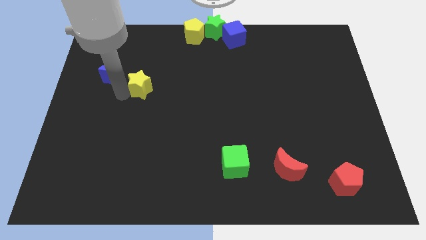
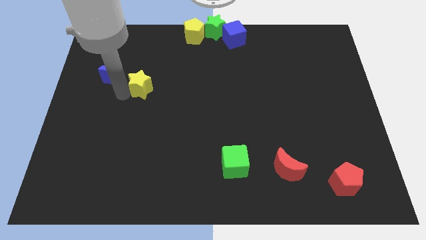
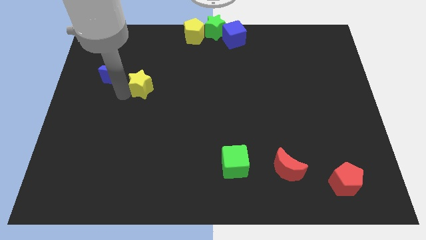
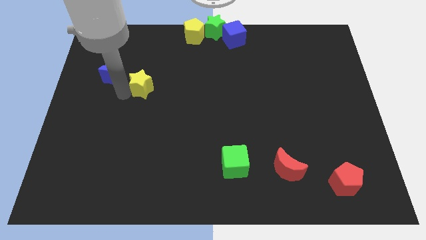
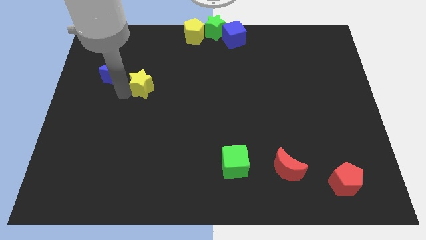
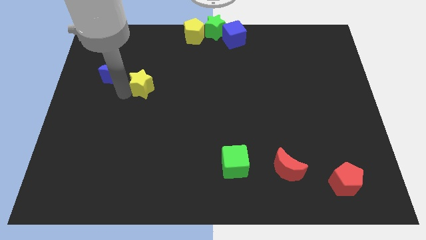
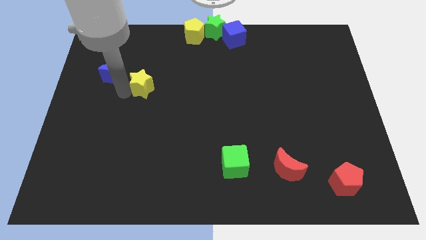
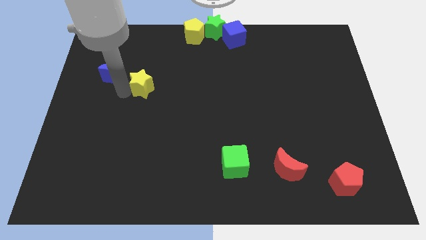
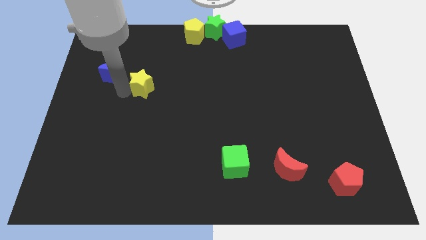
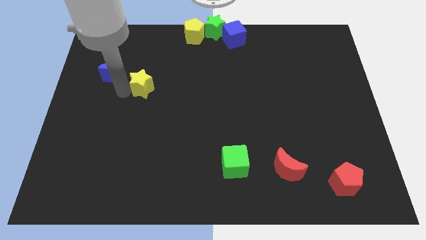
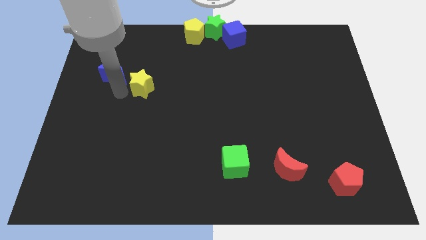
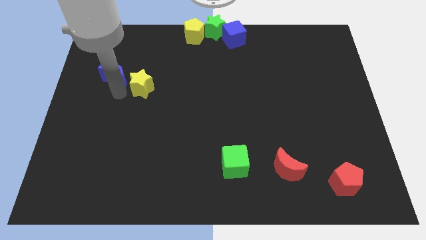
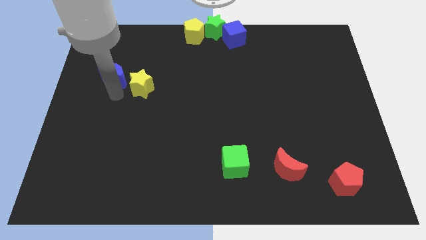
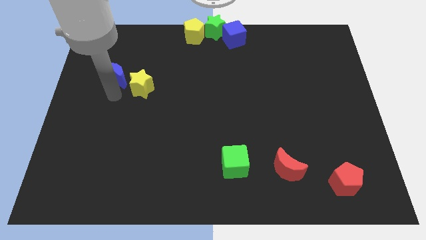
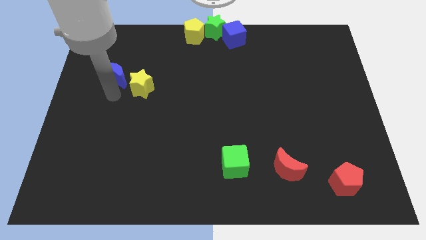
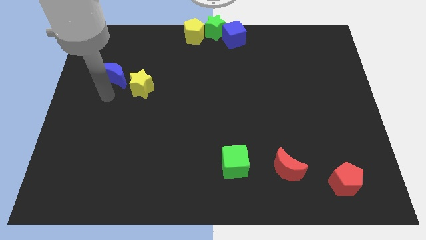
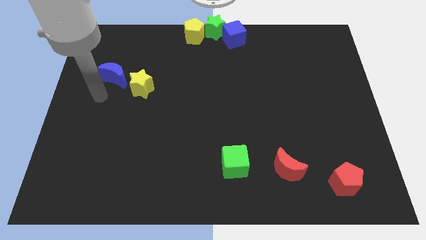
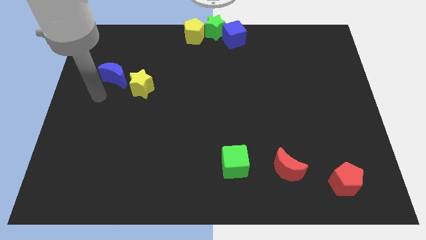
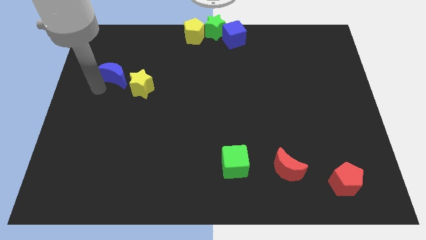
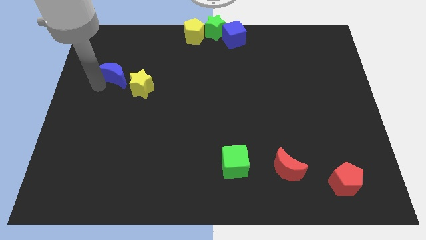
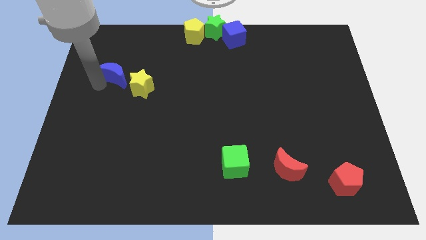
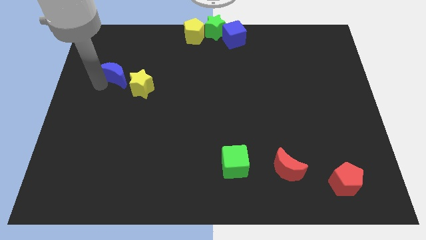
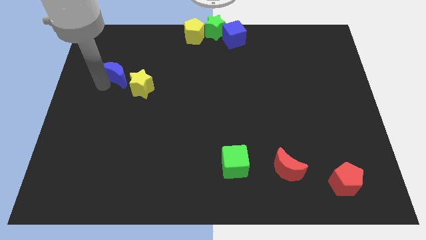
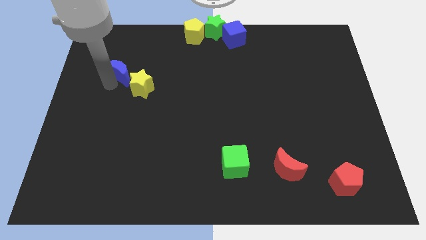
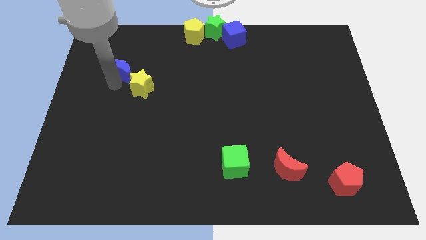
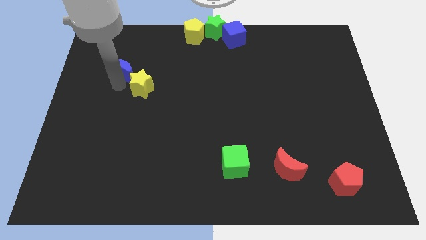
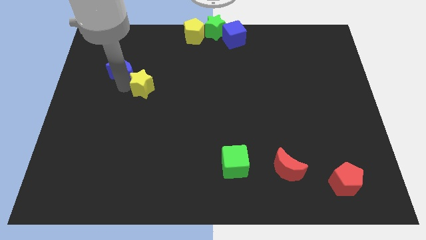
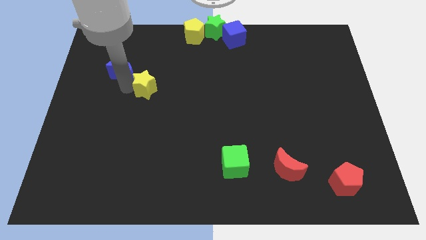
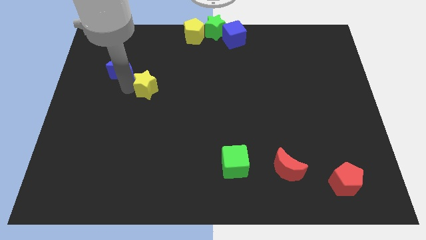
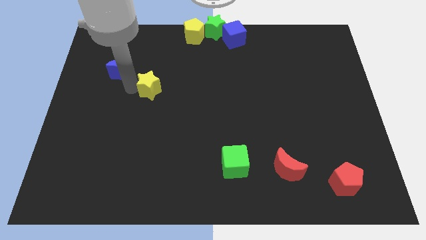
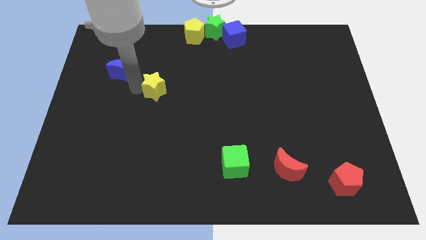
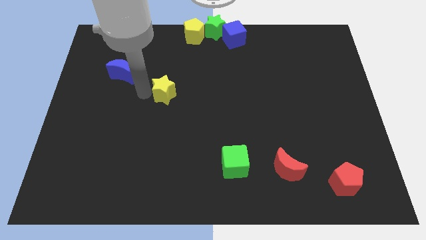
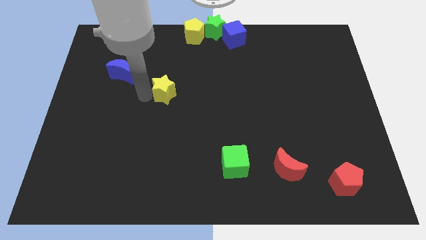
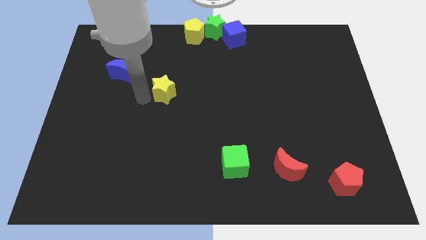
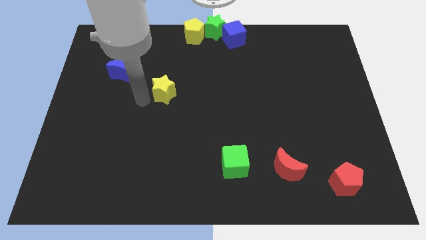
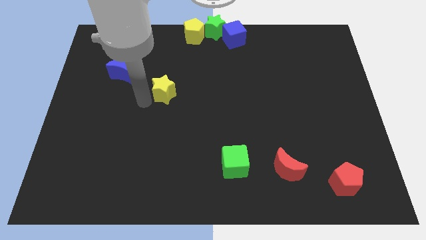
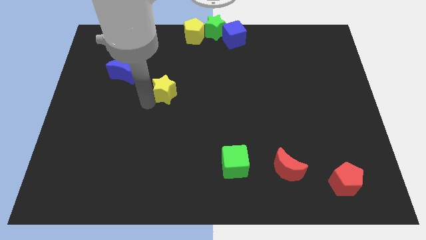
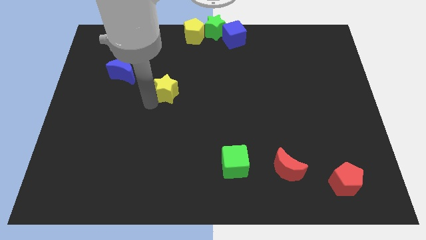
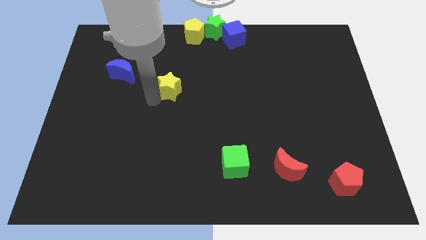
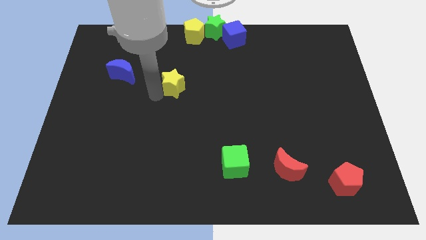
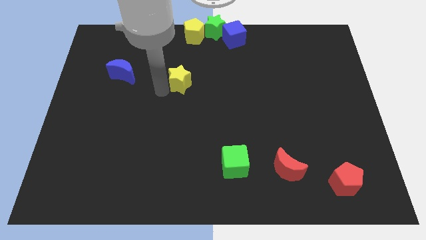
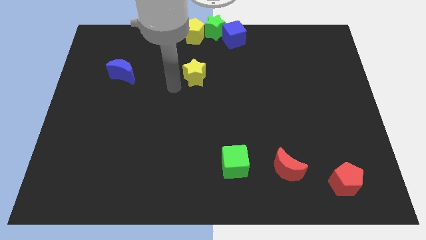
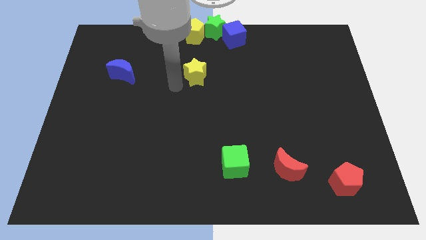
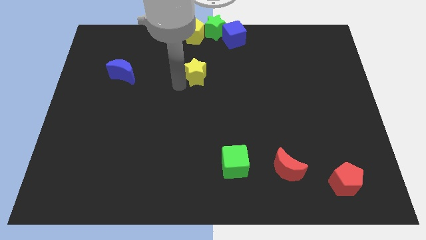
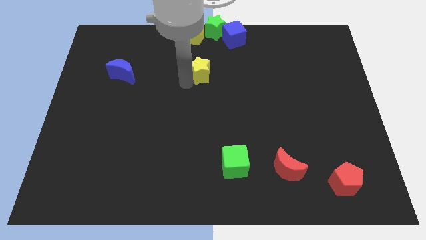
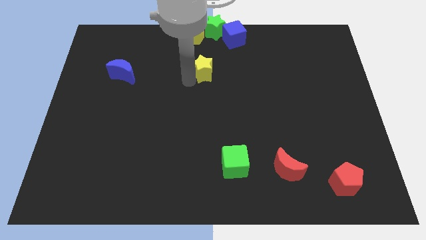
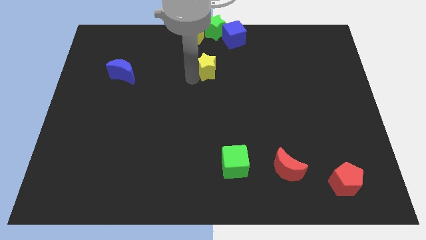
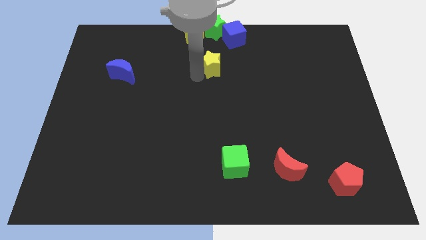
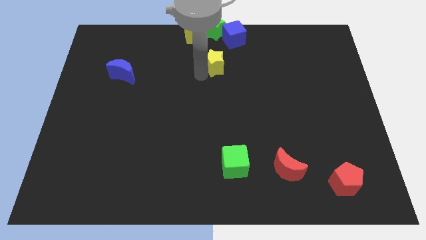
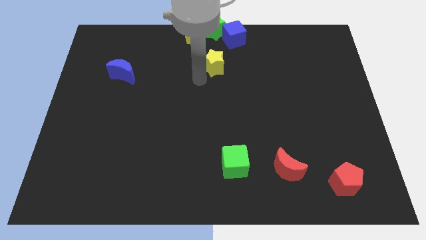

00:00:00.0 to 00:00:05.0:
separate the yellow star from the blue crescent

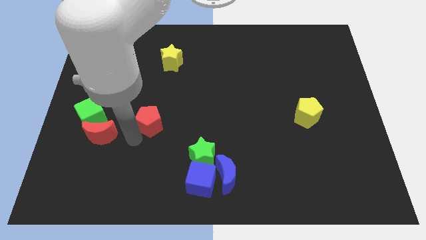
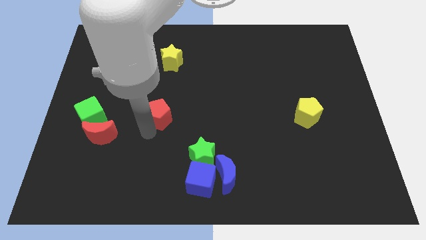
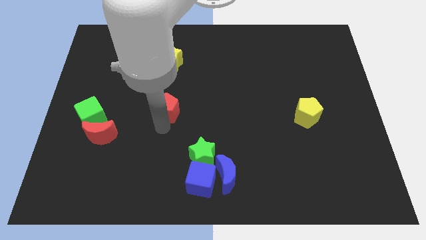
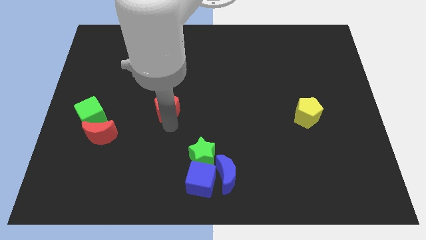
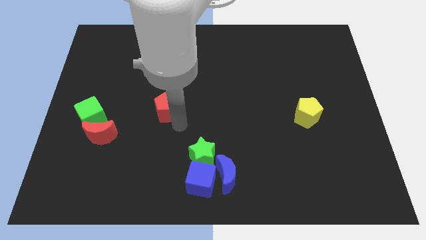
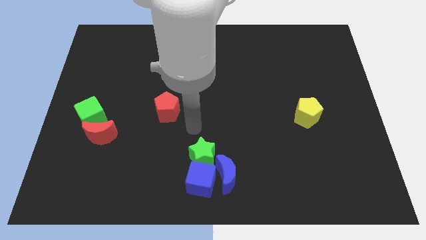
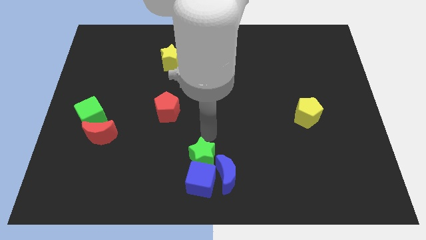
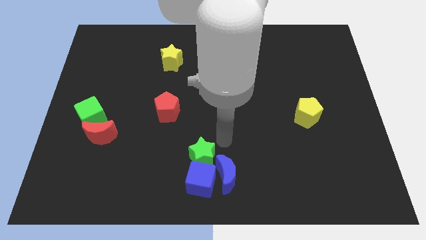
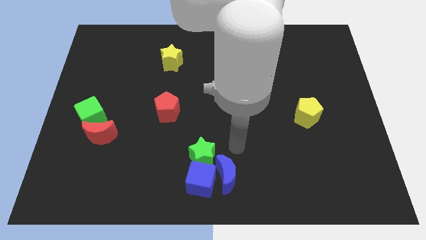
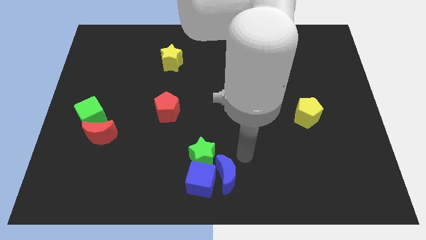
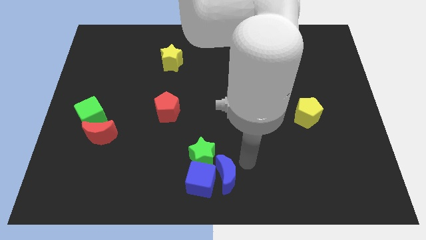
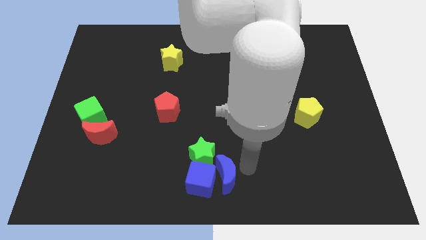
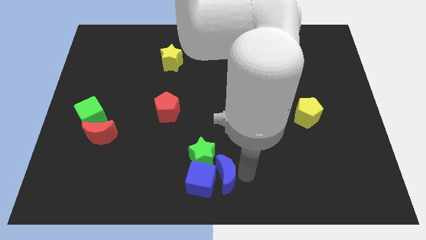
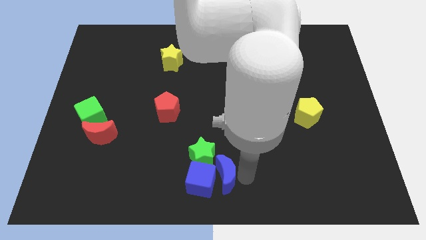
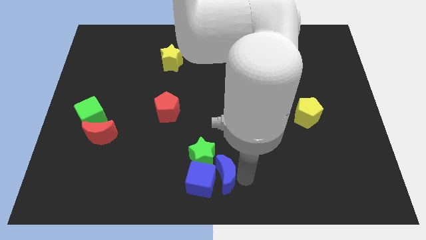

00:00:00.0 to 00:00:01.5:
place the red pentagon below the yellow star

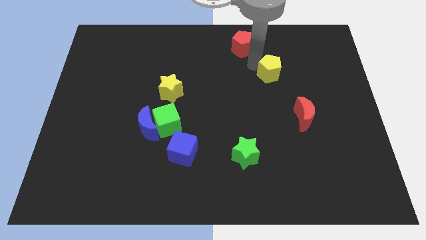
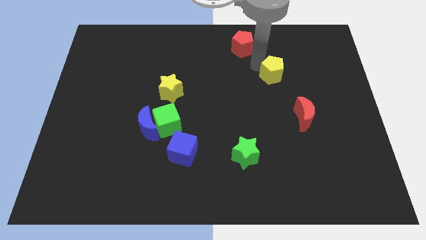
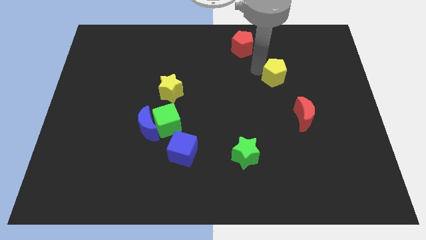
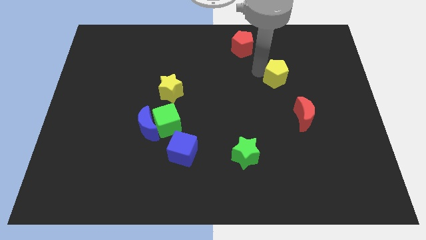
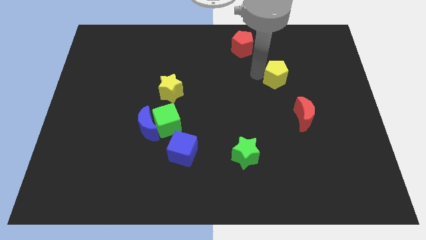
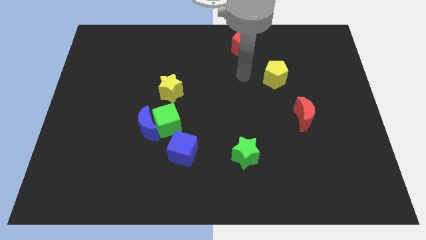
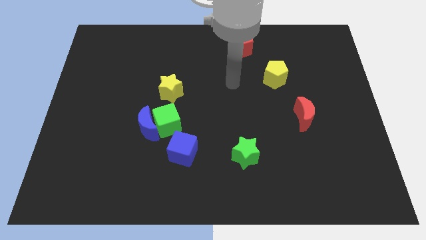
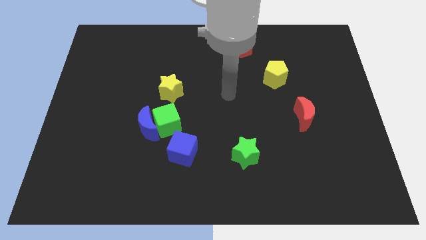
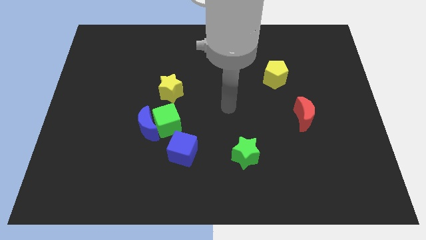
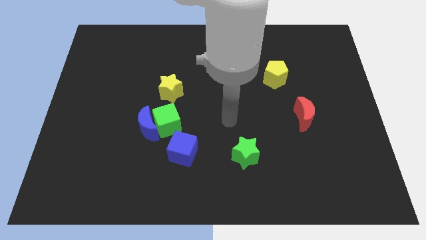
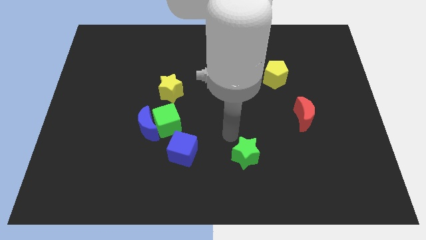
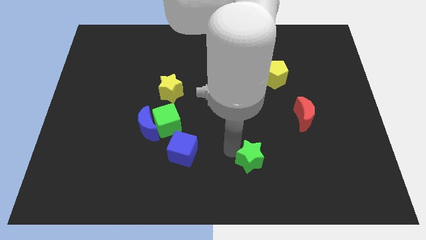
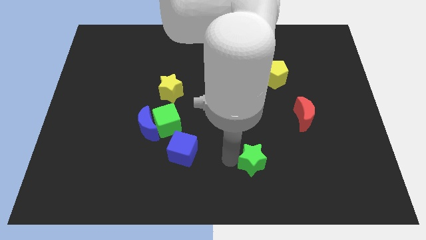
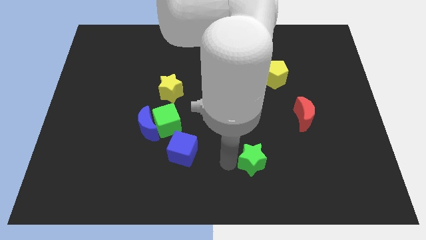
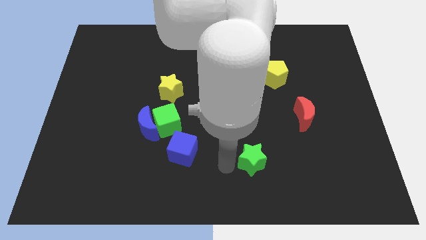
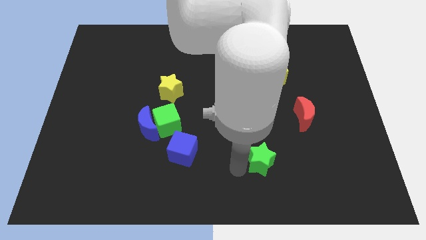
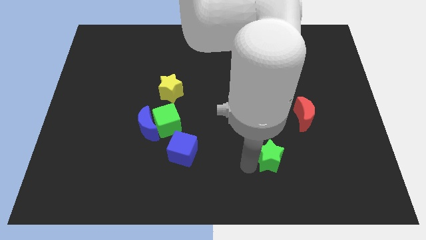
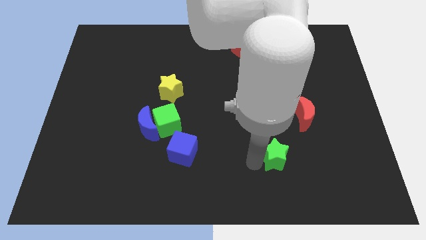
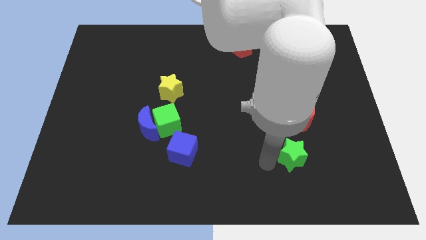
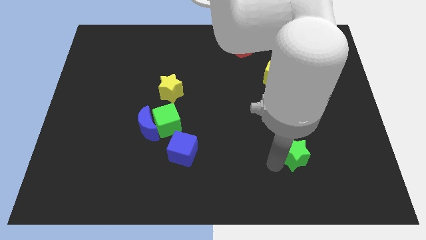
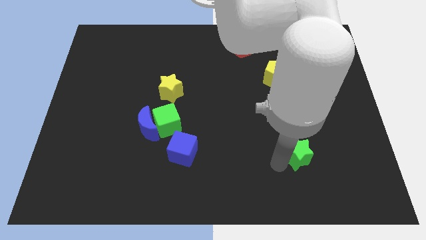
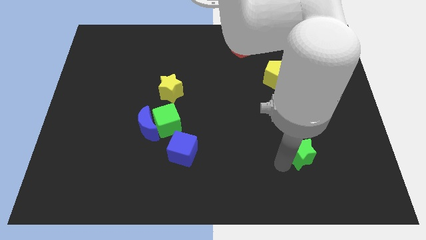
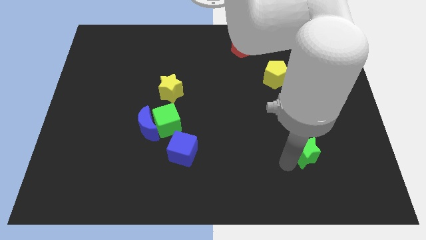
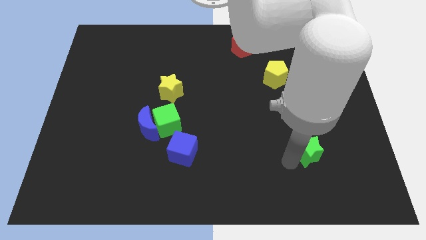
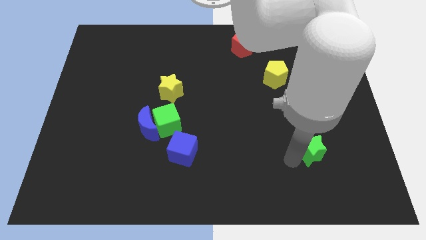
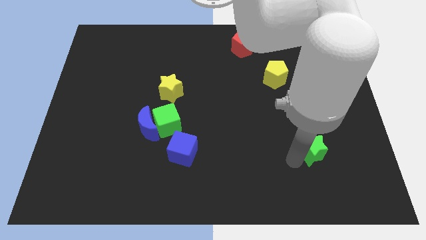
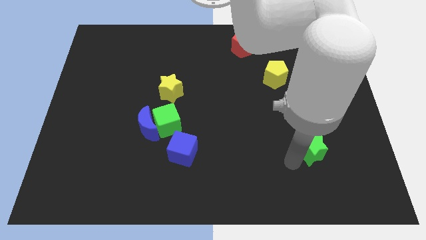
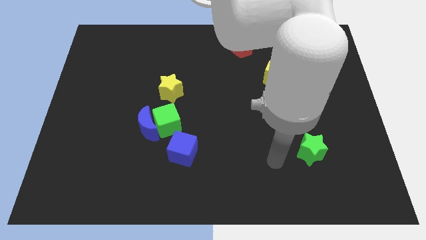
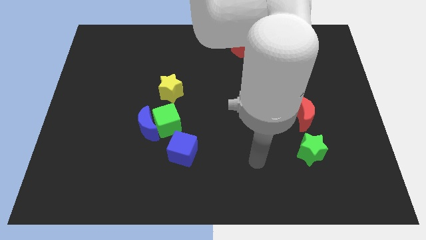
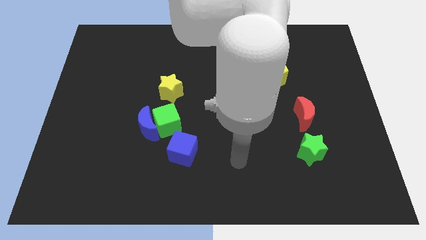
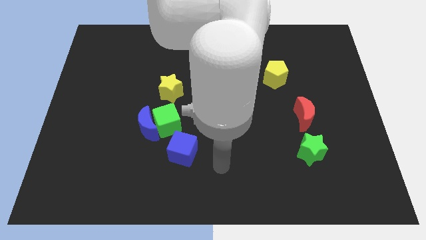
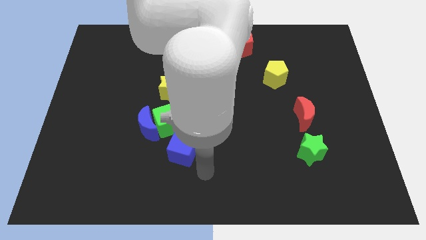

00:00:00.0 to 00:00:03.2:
move the green star towards right center
